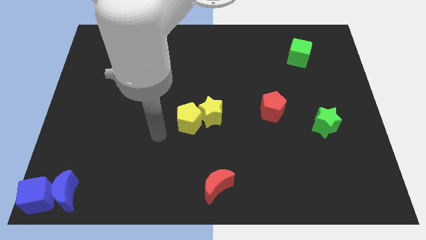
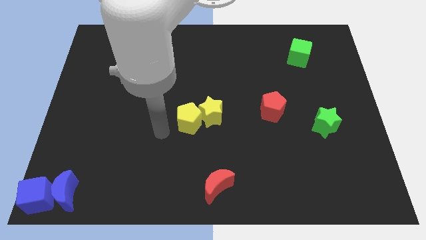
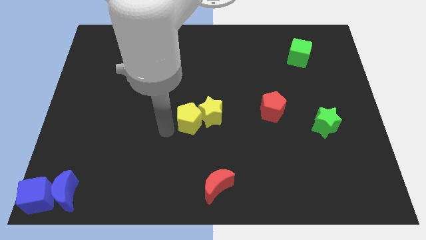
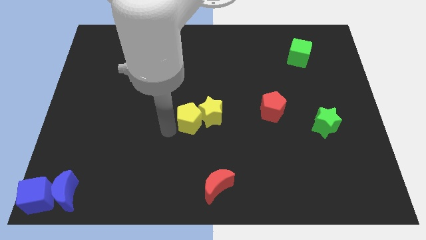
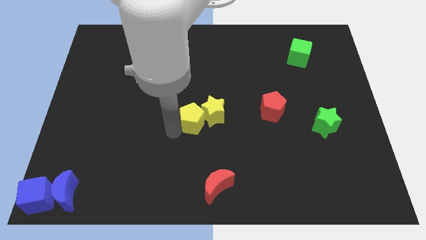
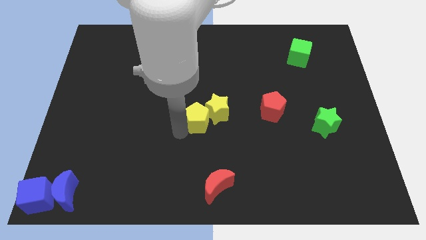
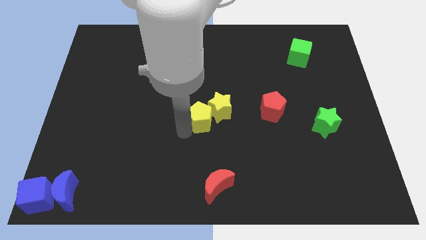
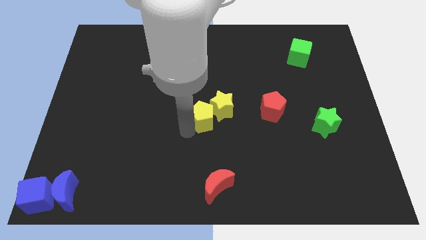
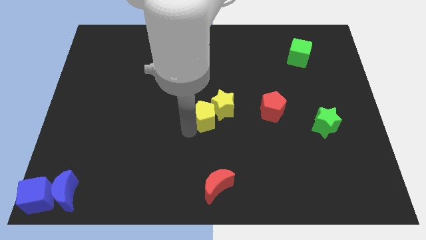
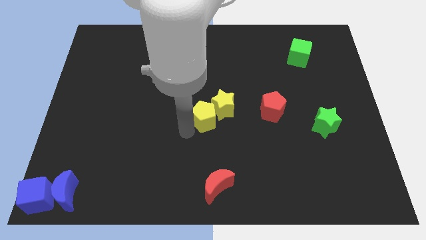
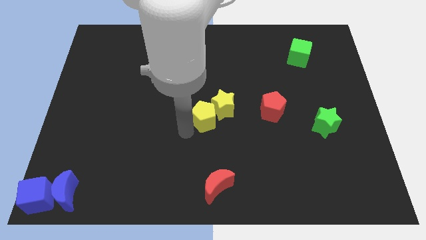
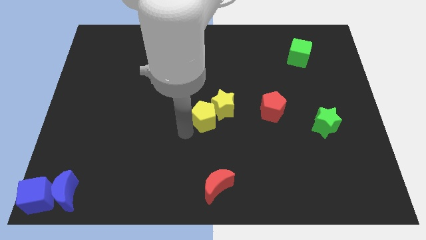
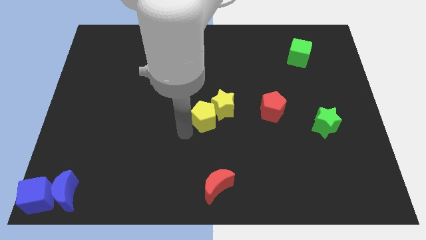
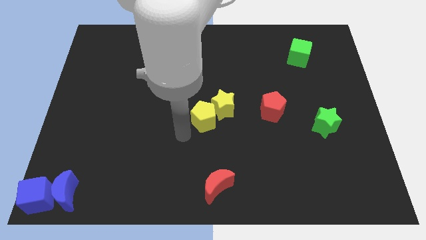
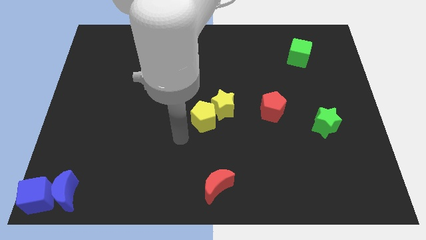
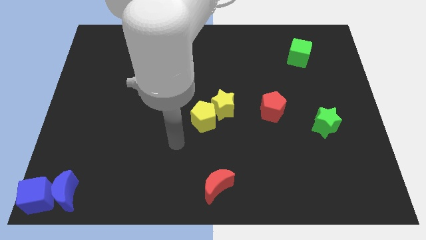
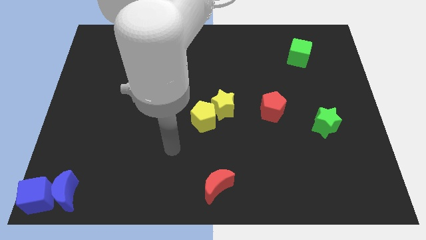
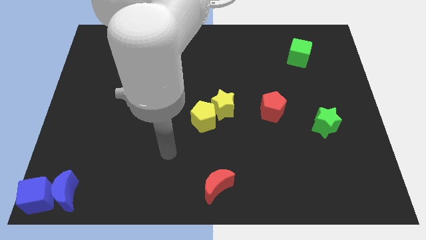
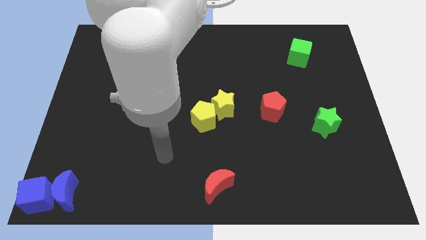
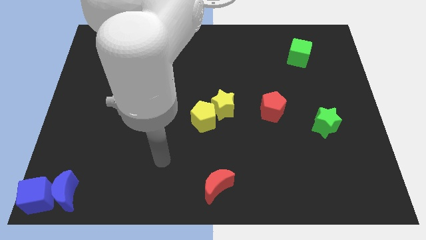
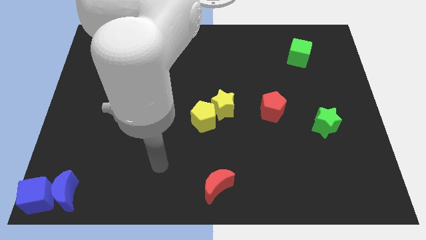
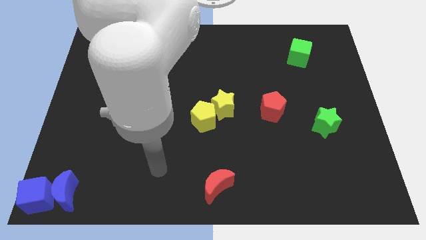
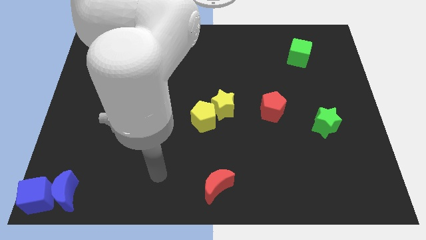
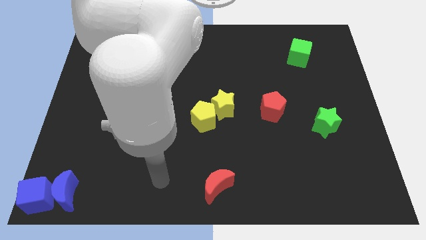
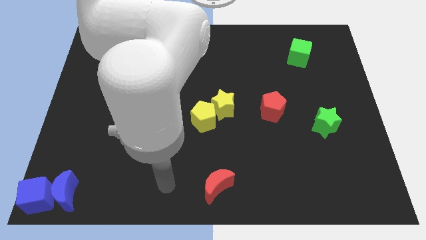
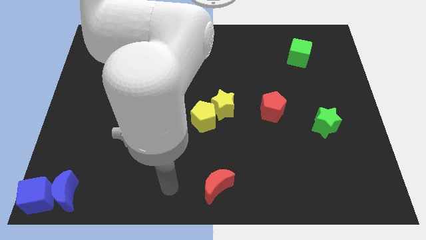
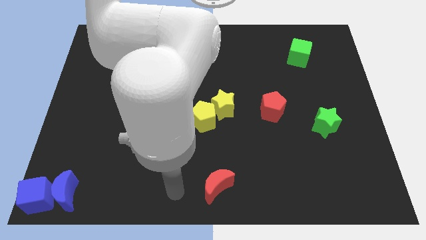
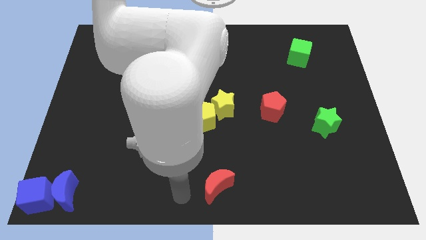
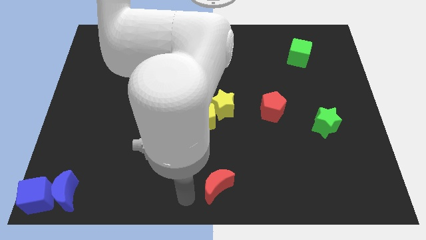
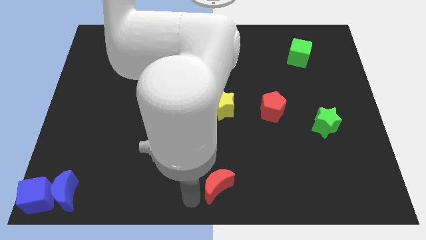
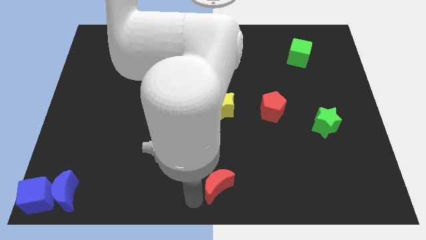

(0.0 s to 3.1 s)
place the yellow pentagon along with yellow star in center of the board

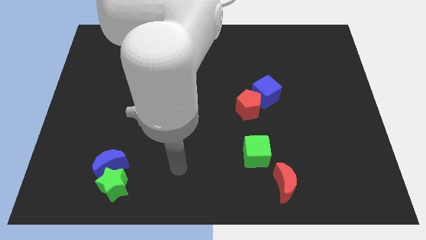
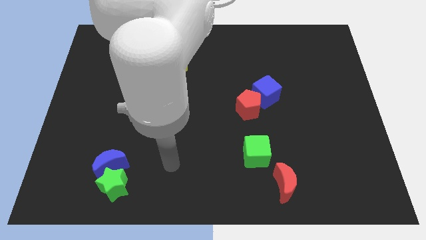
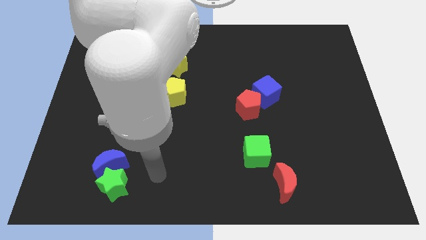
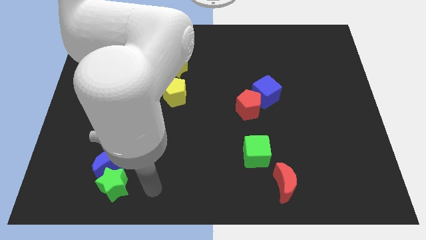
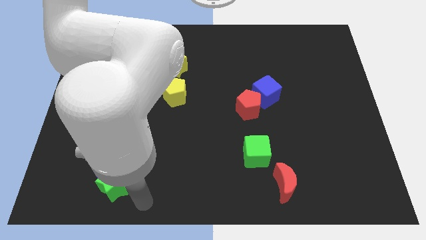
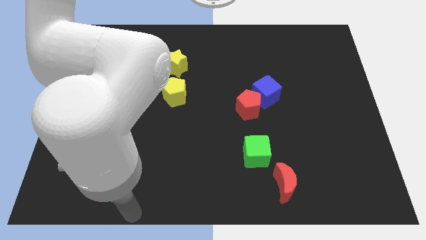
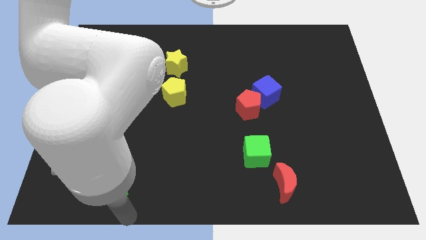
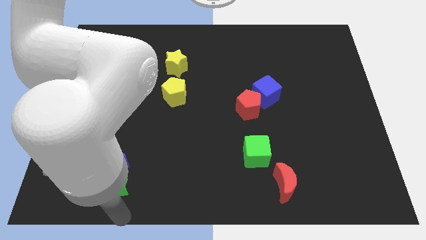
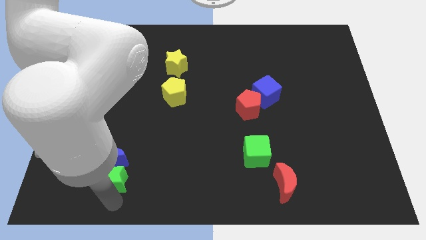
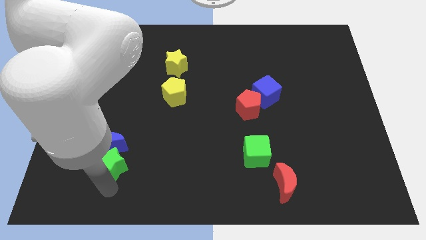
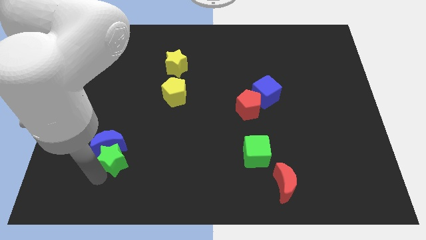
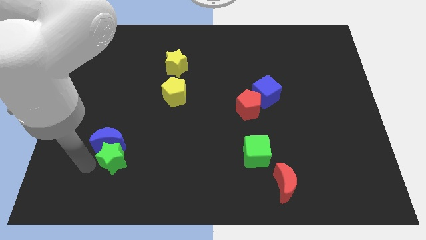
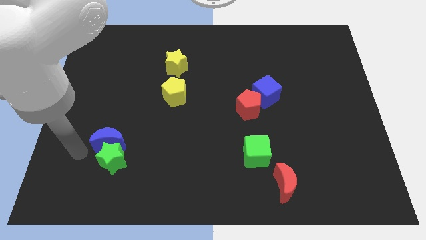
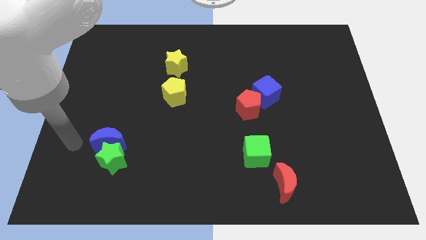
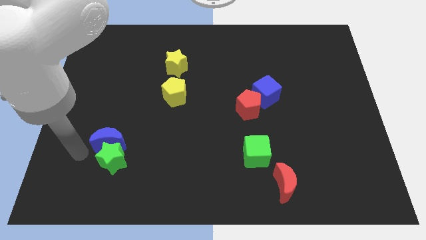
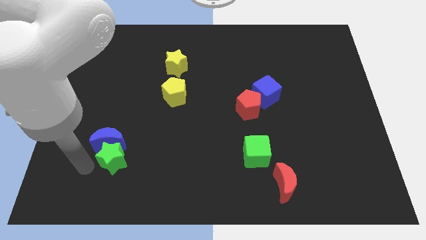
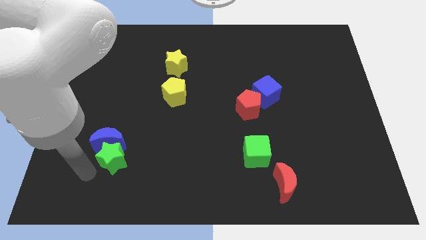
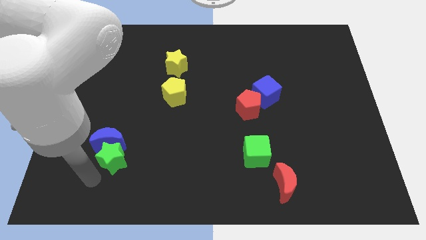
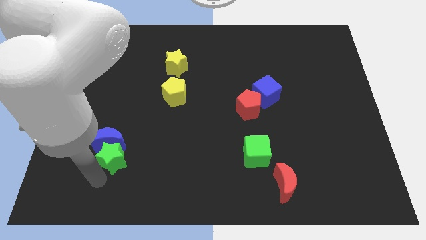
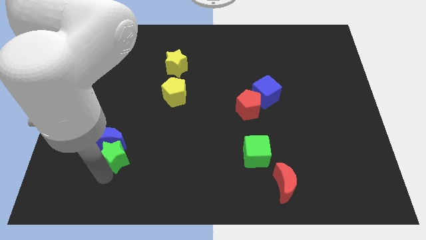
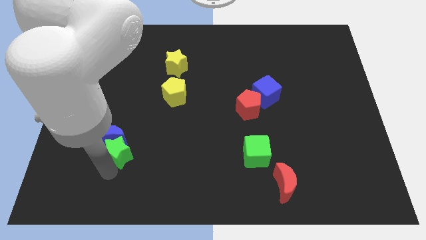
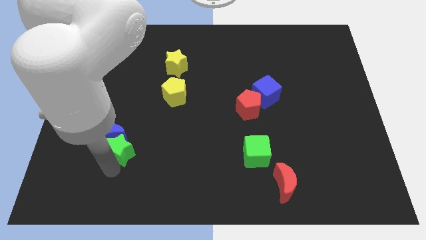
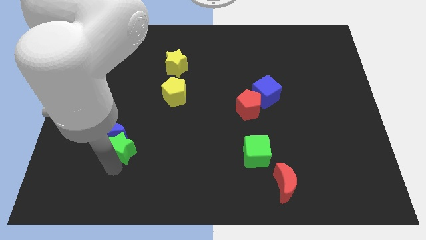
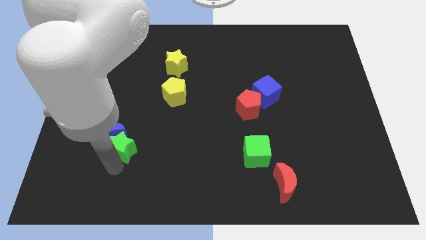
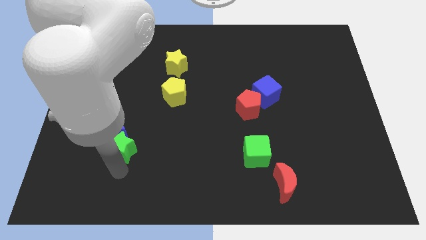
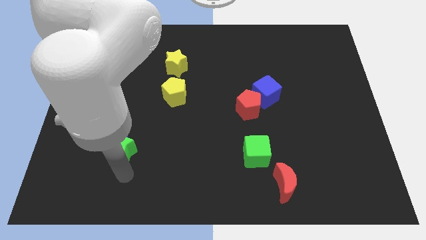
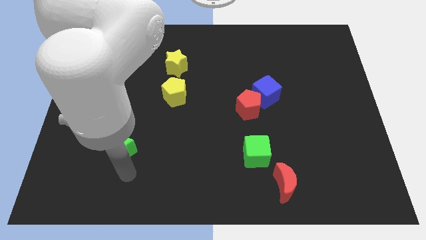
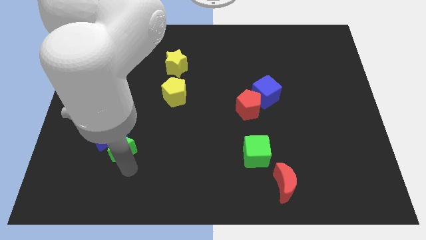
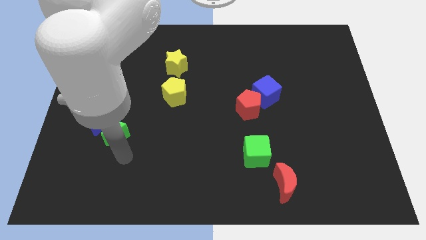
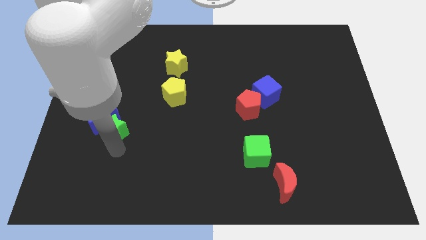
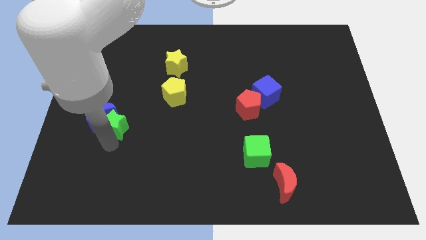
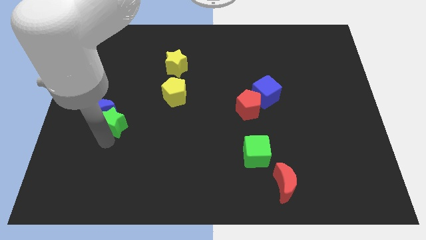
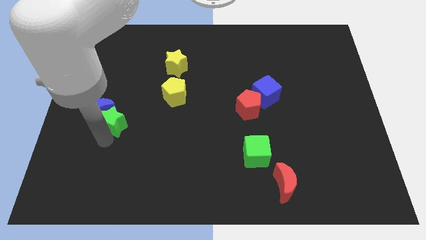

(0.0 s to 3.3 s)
move the green star and the blue moon to the center left

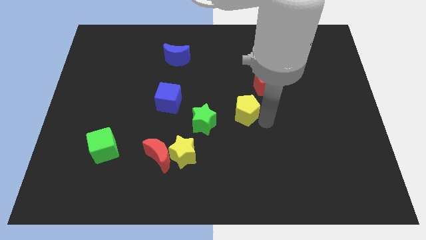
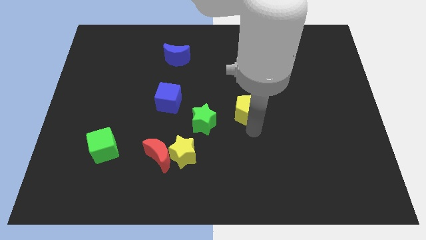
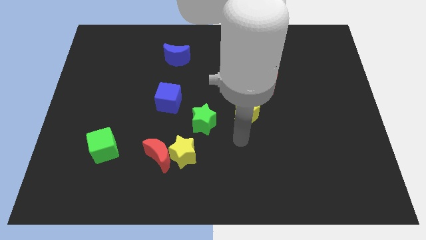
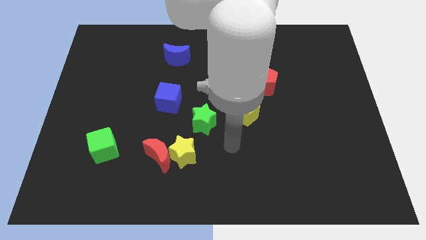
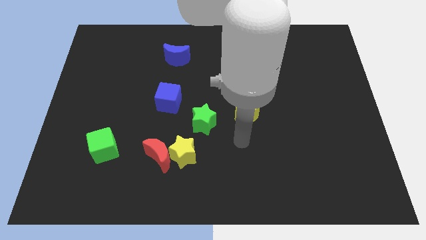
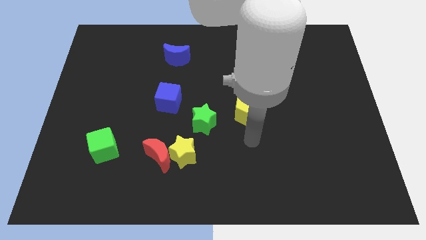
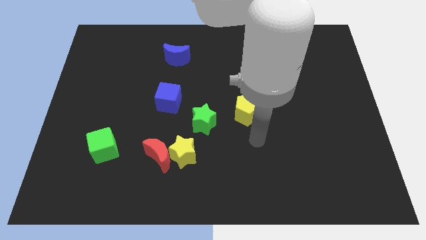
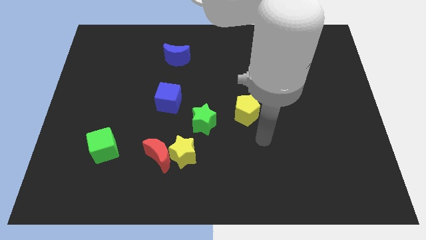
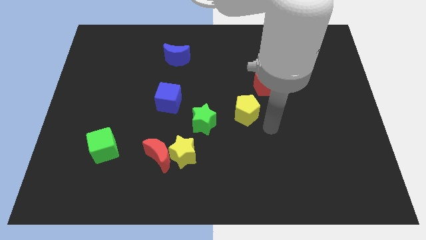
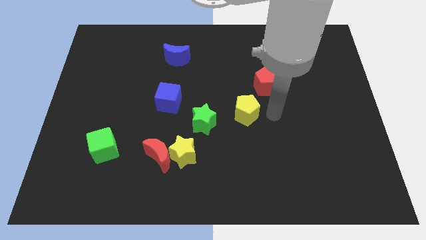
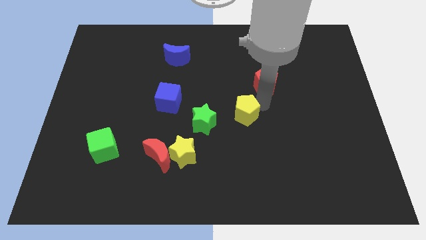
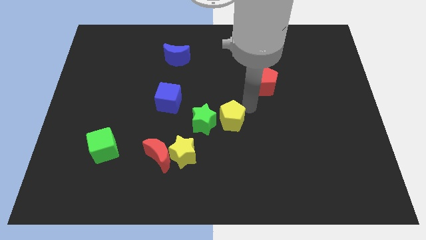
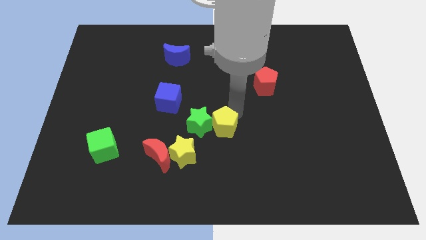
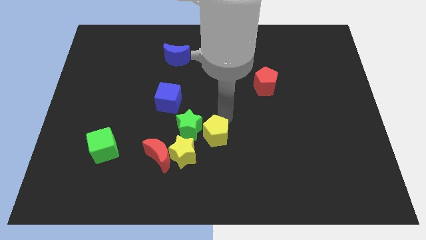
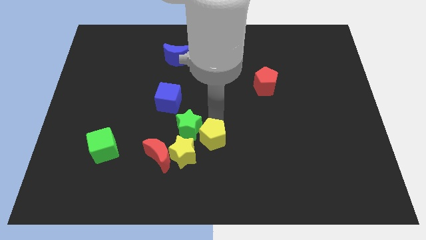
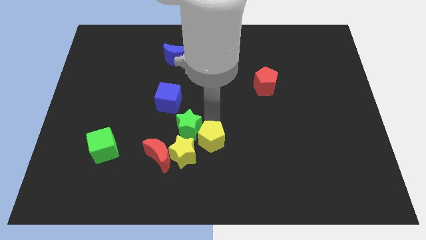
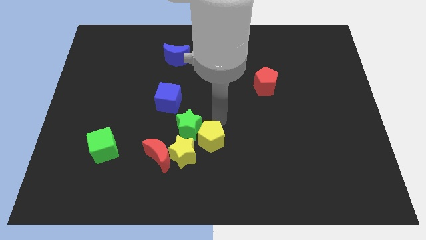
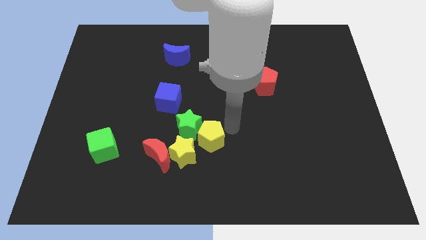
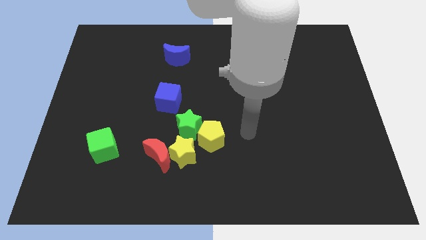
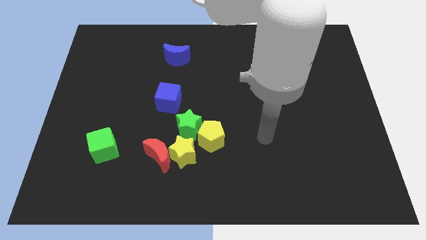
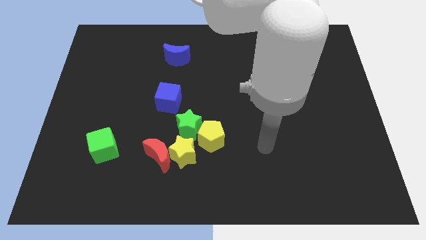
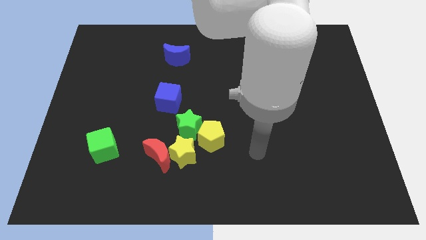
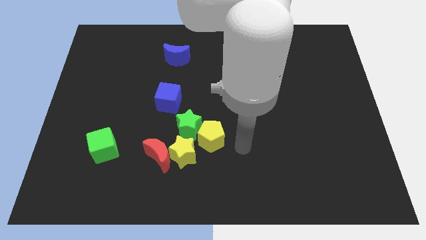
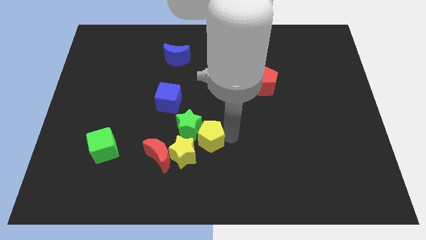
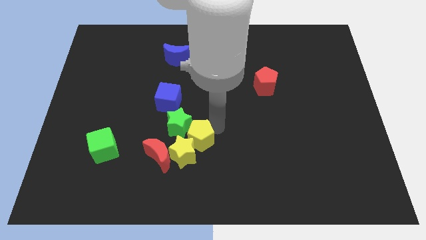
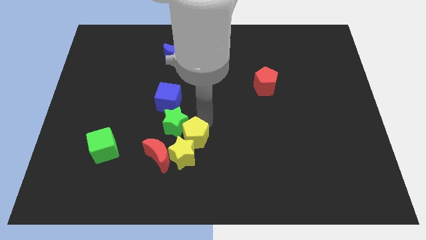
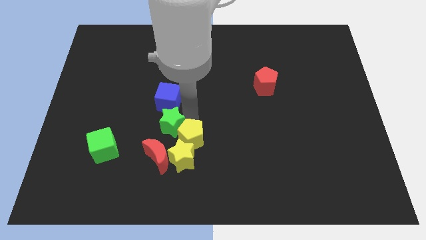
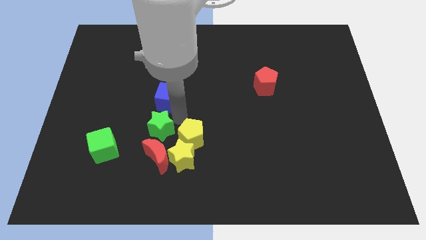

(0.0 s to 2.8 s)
move the yellow pentagon to the top of the yellow star
